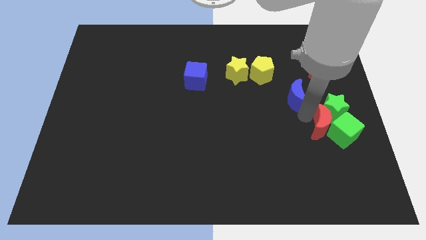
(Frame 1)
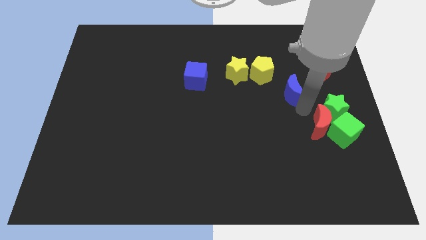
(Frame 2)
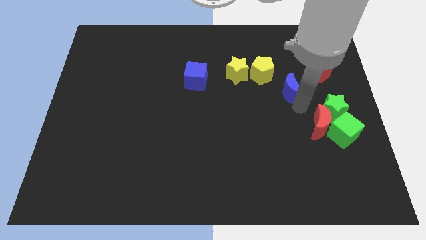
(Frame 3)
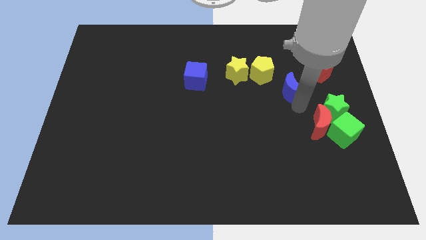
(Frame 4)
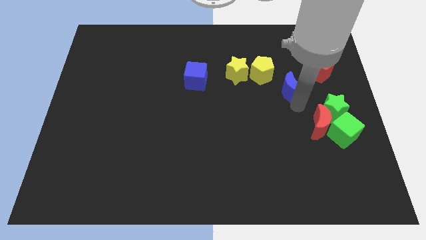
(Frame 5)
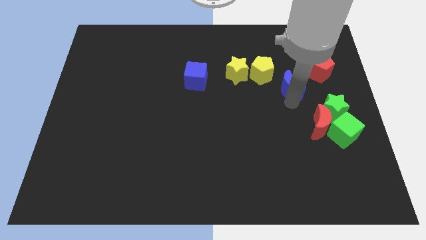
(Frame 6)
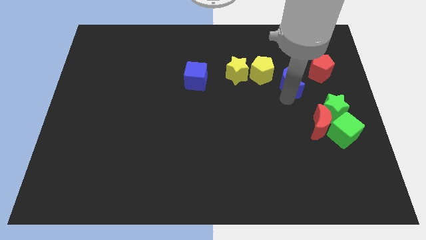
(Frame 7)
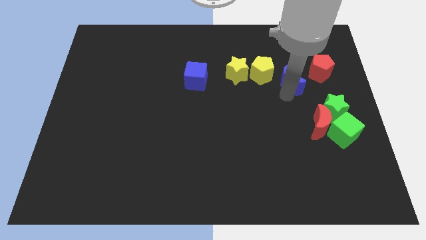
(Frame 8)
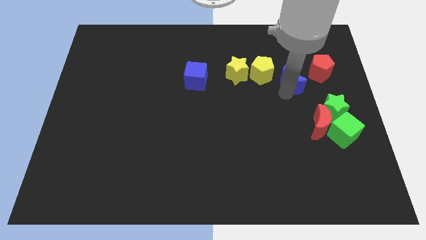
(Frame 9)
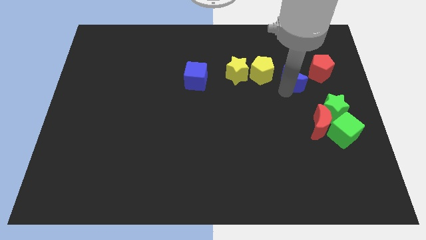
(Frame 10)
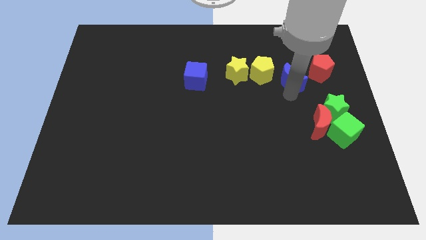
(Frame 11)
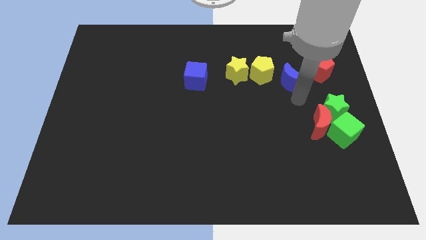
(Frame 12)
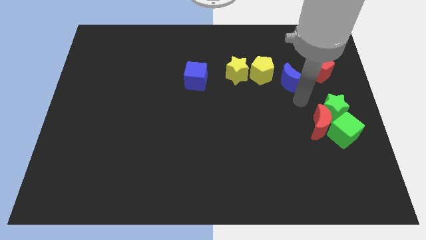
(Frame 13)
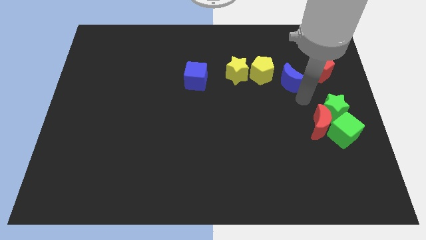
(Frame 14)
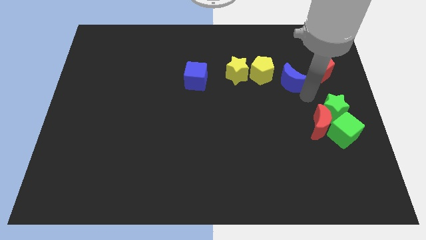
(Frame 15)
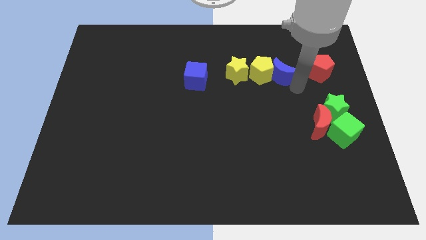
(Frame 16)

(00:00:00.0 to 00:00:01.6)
push the blue crescent to the right of yellow pentagon

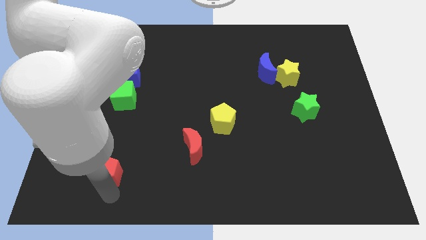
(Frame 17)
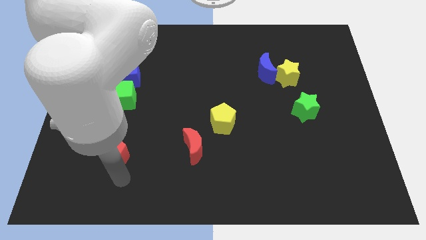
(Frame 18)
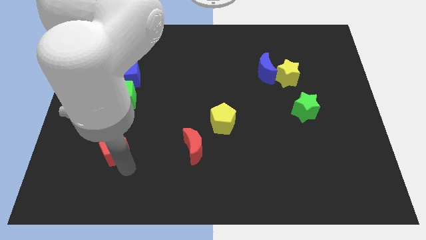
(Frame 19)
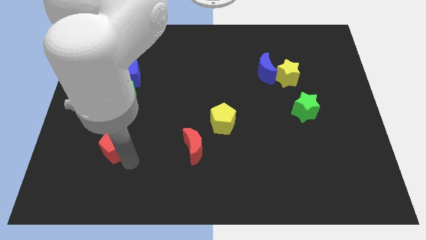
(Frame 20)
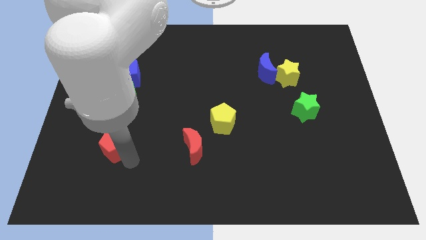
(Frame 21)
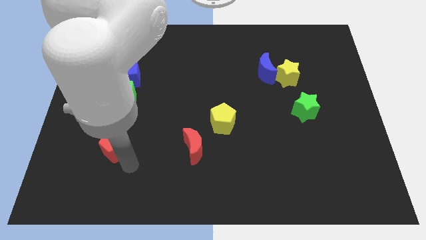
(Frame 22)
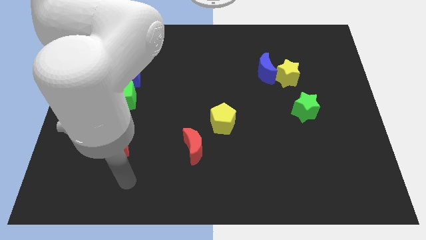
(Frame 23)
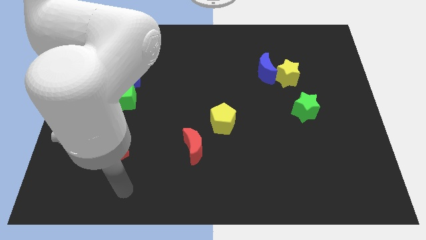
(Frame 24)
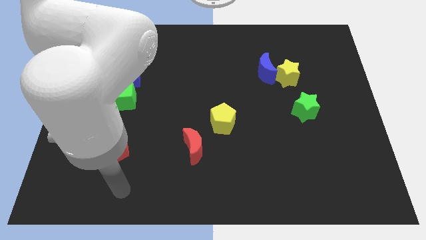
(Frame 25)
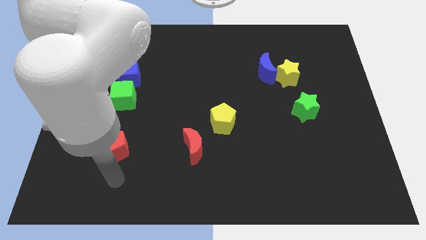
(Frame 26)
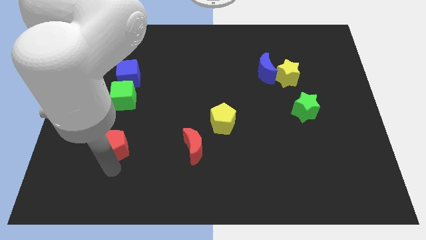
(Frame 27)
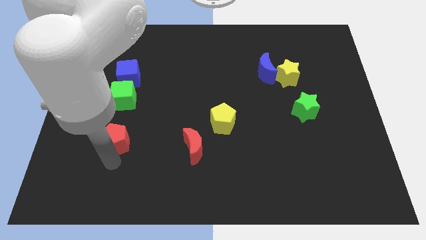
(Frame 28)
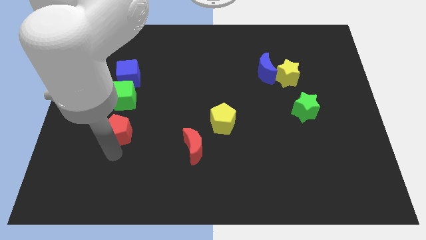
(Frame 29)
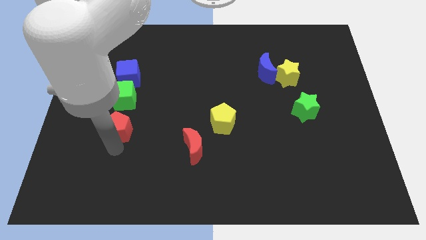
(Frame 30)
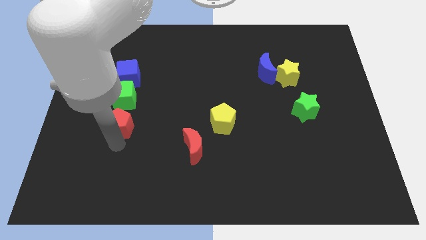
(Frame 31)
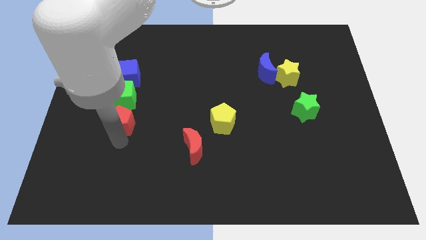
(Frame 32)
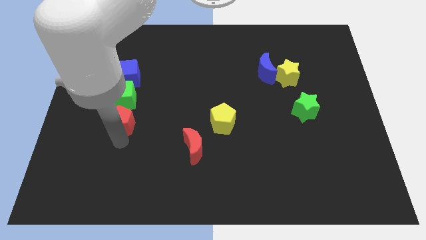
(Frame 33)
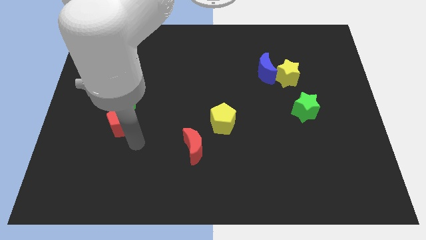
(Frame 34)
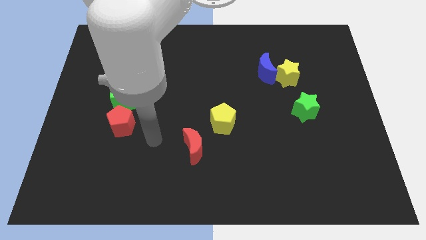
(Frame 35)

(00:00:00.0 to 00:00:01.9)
place red pentagon to the bottom of green cube

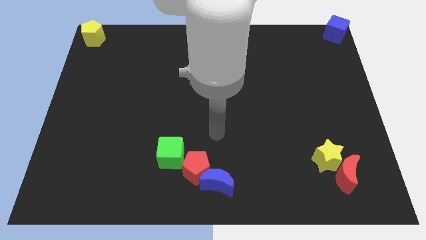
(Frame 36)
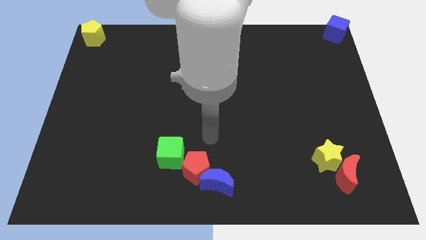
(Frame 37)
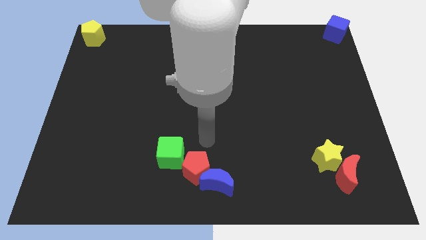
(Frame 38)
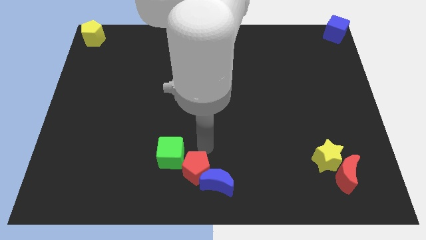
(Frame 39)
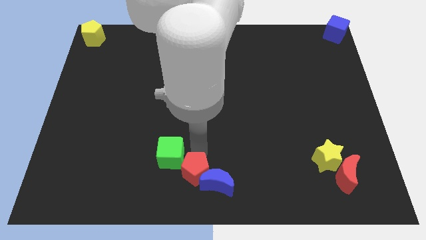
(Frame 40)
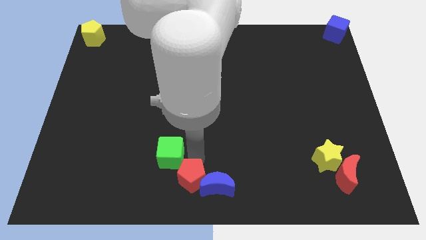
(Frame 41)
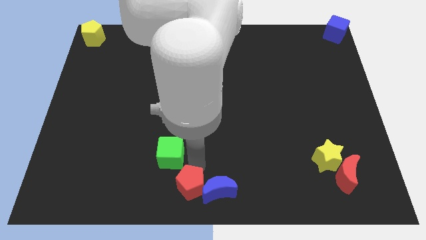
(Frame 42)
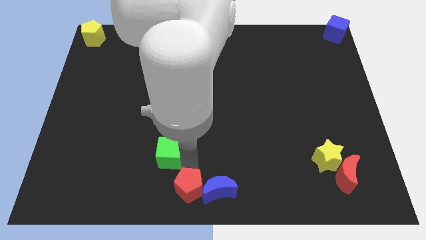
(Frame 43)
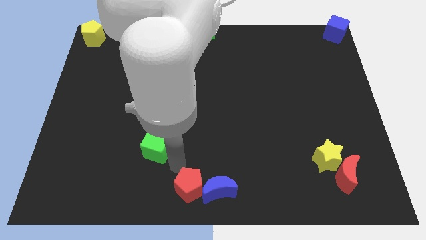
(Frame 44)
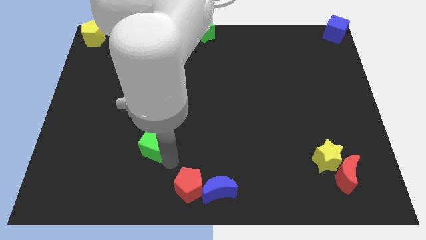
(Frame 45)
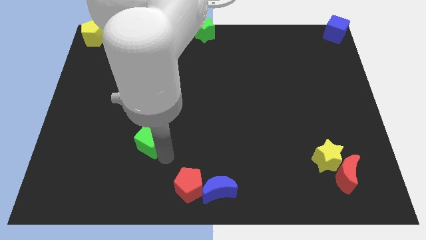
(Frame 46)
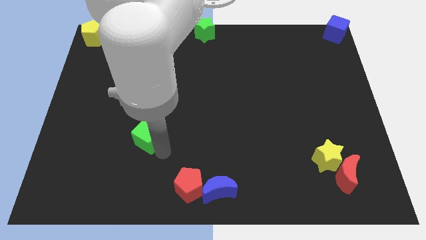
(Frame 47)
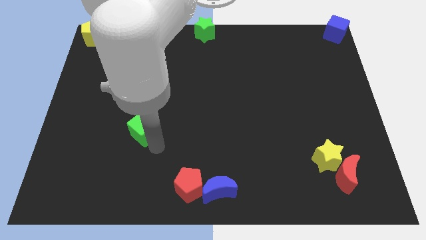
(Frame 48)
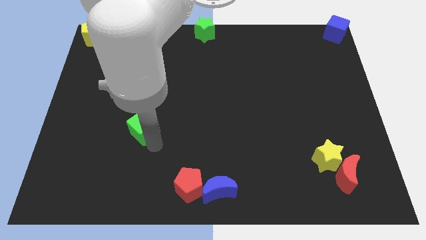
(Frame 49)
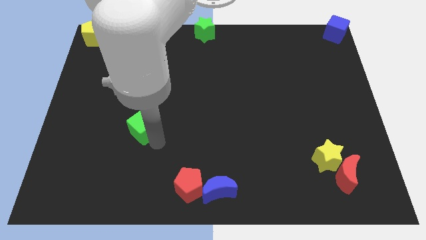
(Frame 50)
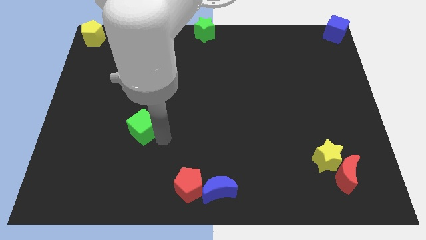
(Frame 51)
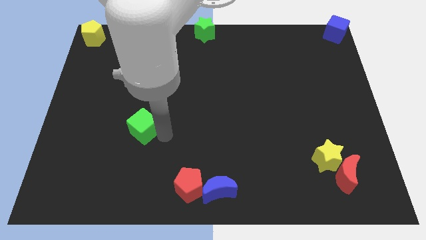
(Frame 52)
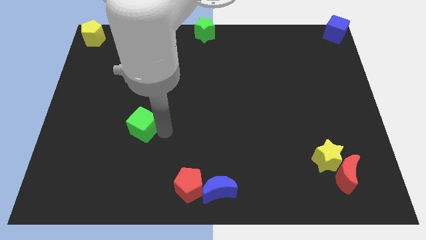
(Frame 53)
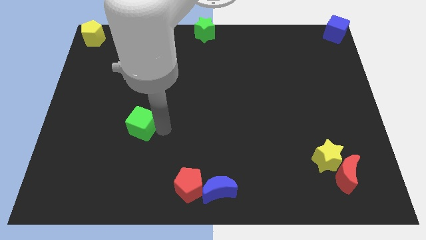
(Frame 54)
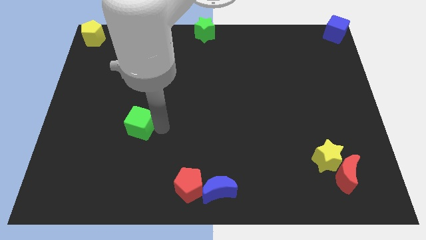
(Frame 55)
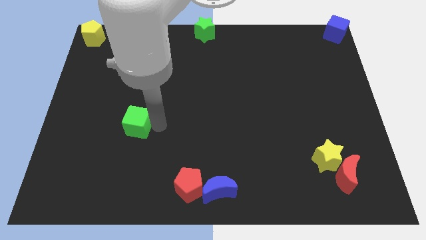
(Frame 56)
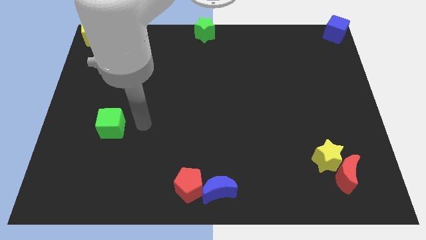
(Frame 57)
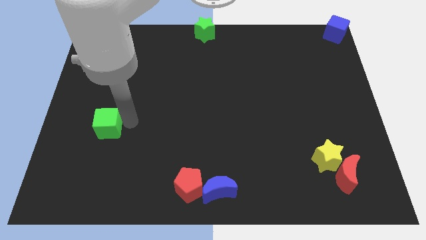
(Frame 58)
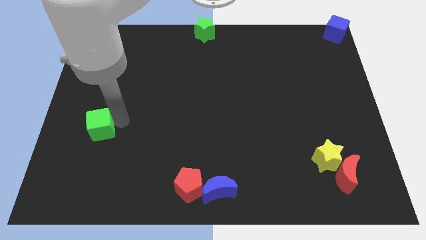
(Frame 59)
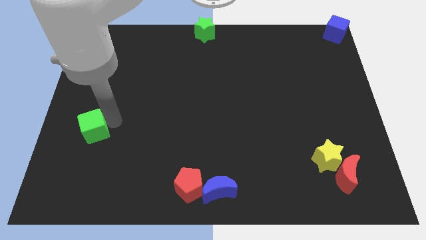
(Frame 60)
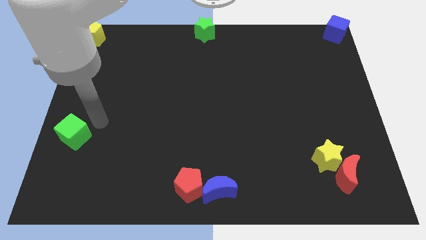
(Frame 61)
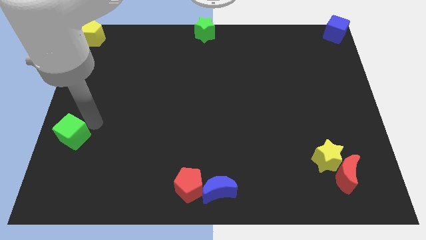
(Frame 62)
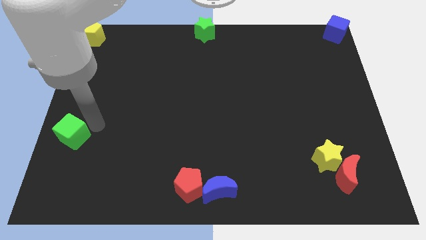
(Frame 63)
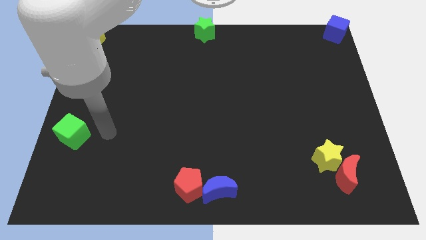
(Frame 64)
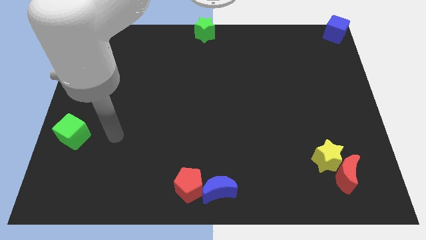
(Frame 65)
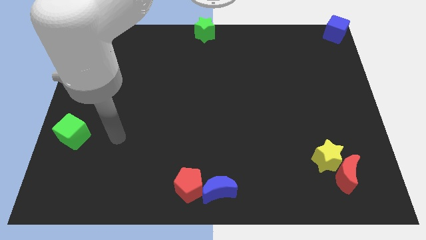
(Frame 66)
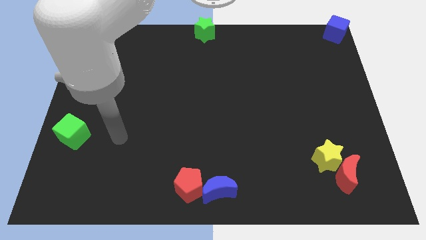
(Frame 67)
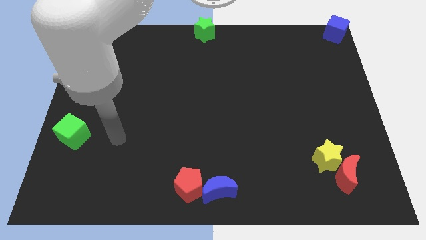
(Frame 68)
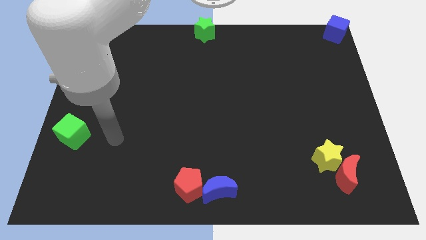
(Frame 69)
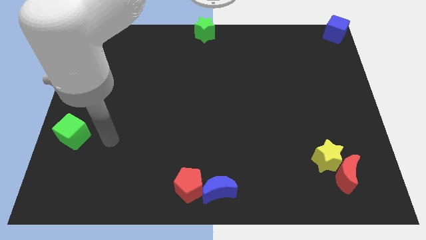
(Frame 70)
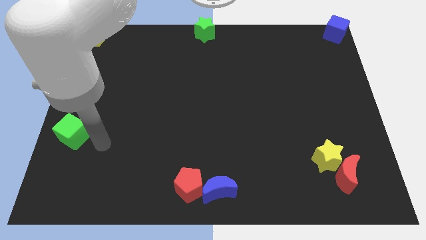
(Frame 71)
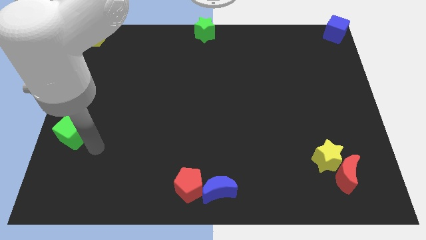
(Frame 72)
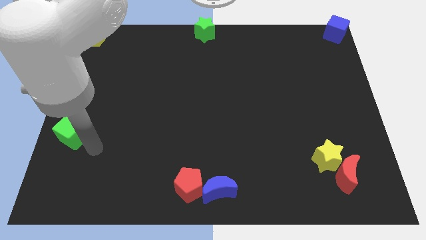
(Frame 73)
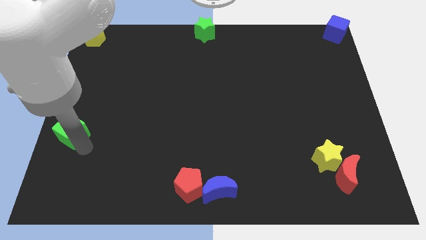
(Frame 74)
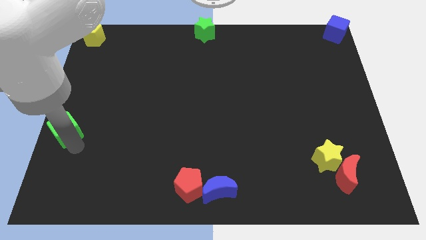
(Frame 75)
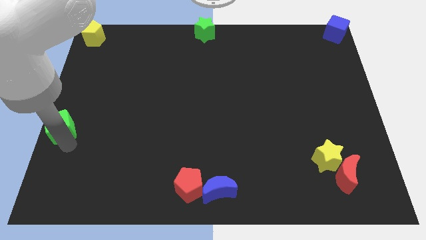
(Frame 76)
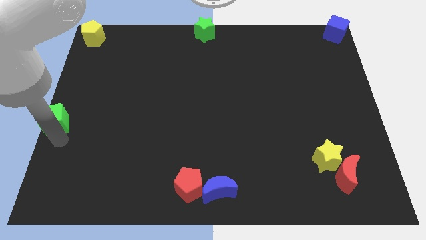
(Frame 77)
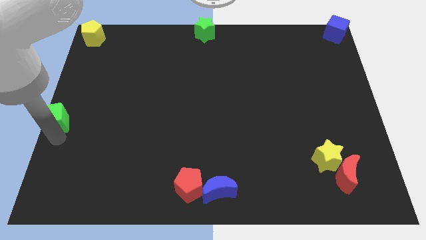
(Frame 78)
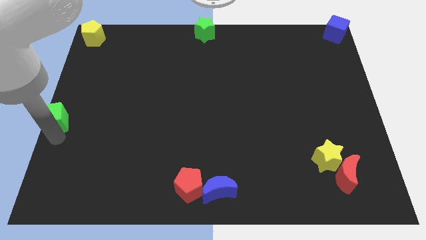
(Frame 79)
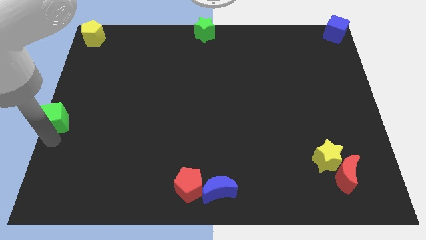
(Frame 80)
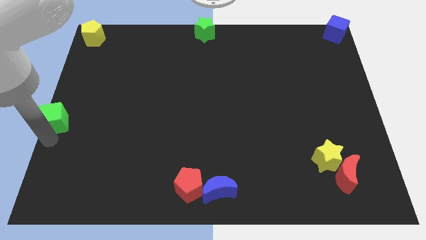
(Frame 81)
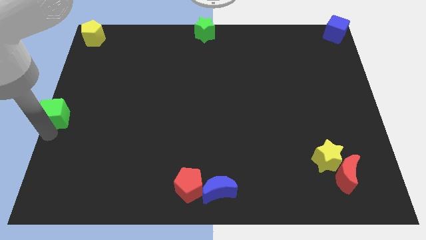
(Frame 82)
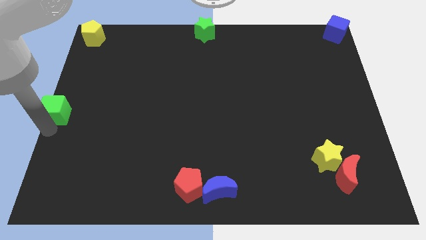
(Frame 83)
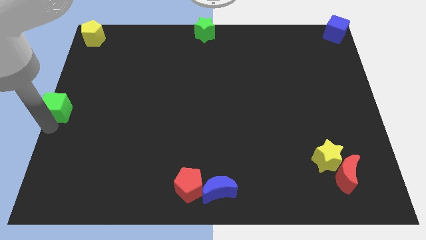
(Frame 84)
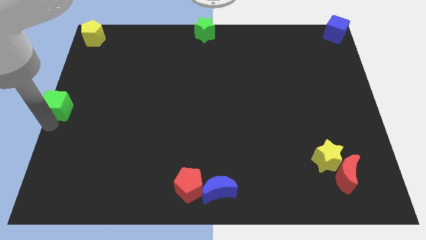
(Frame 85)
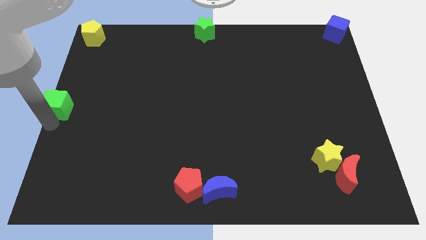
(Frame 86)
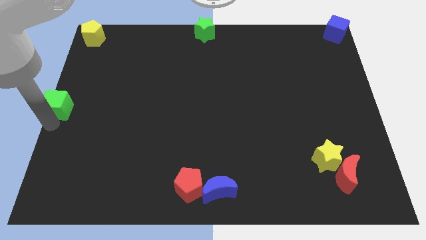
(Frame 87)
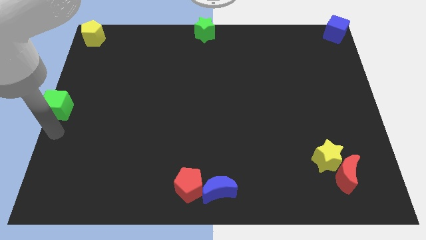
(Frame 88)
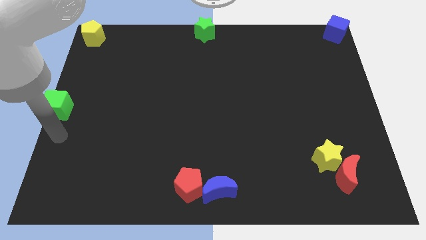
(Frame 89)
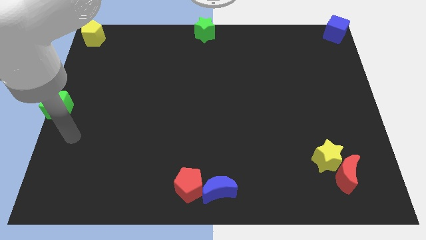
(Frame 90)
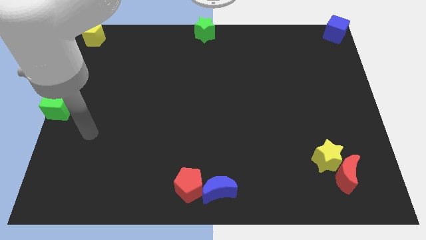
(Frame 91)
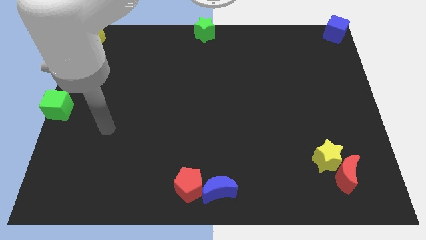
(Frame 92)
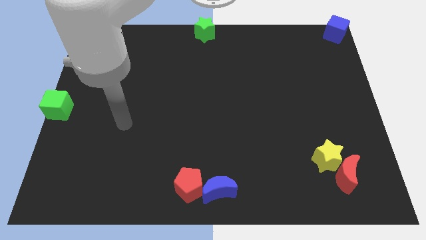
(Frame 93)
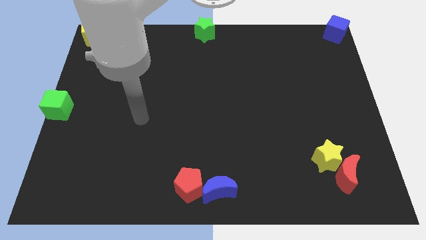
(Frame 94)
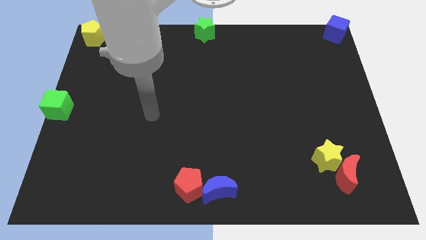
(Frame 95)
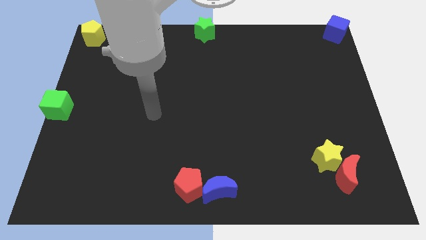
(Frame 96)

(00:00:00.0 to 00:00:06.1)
slide green cube in the center left
